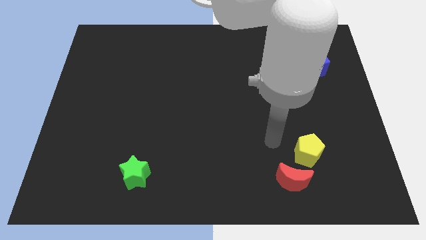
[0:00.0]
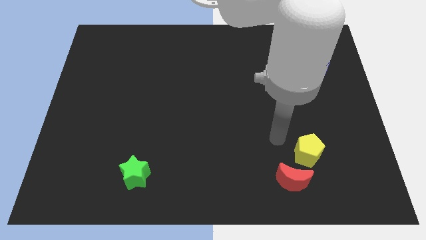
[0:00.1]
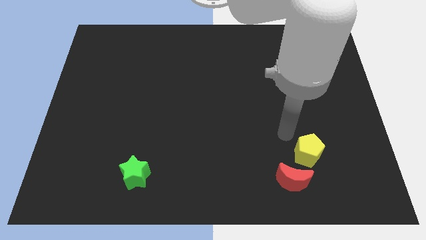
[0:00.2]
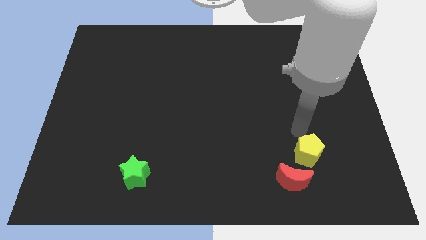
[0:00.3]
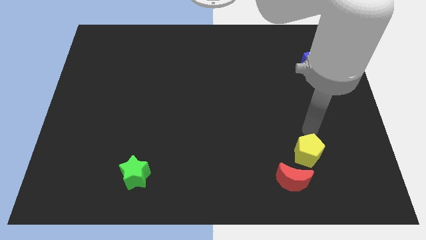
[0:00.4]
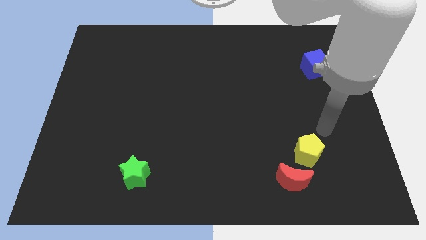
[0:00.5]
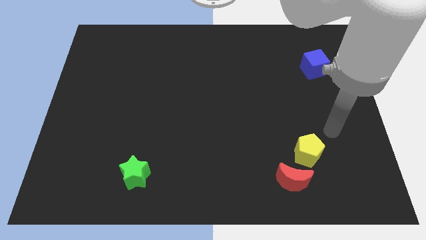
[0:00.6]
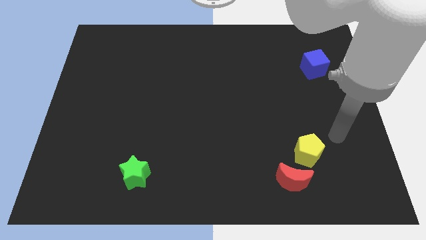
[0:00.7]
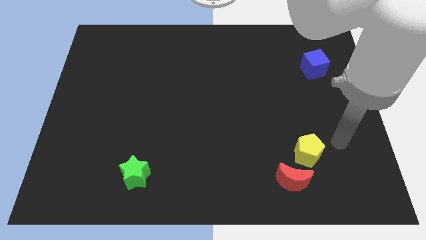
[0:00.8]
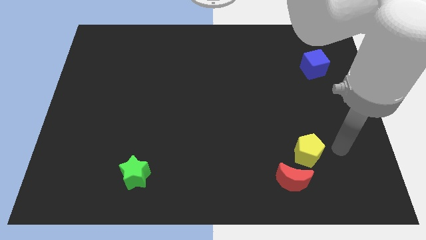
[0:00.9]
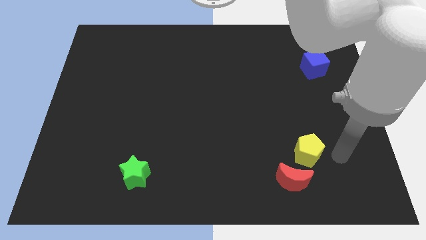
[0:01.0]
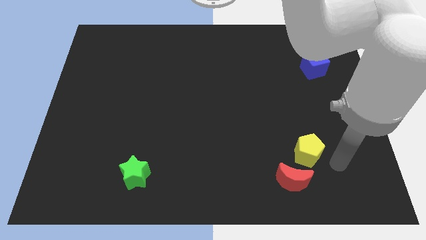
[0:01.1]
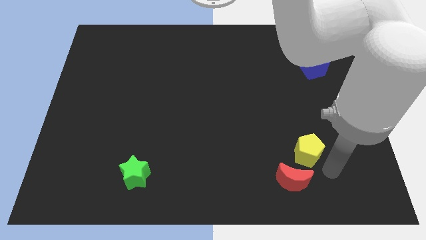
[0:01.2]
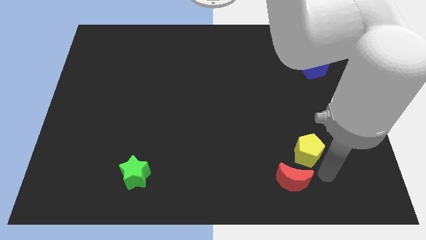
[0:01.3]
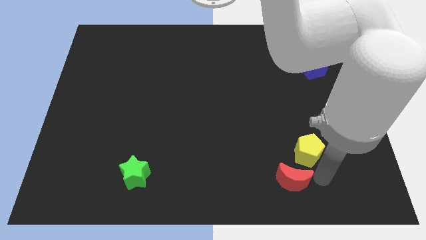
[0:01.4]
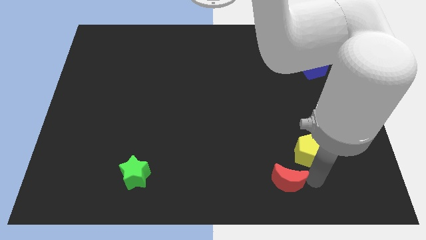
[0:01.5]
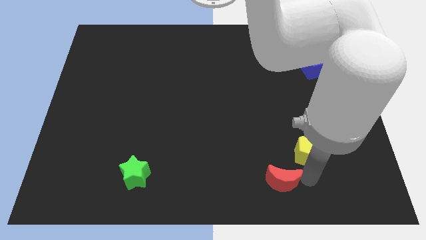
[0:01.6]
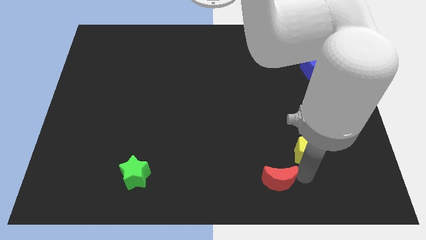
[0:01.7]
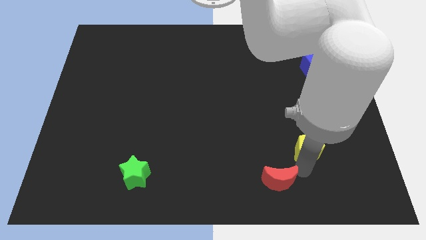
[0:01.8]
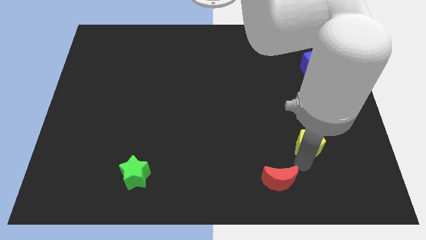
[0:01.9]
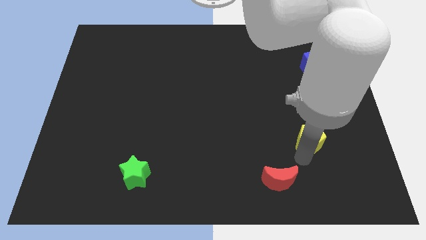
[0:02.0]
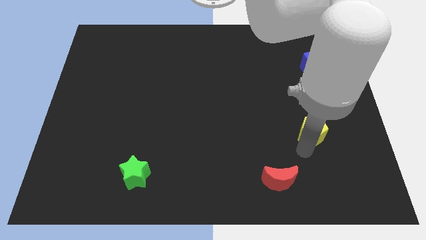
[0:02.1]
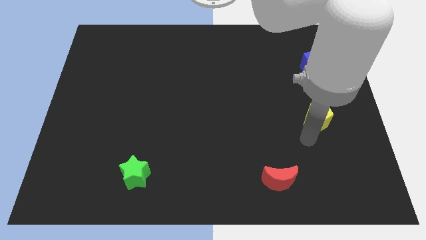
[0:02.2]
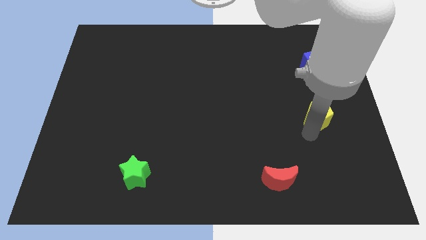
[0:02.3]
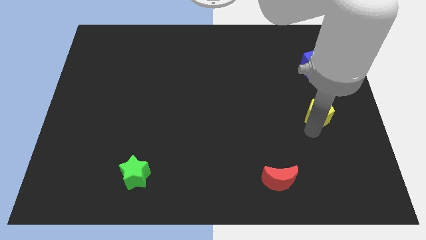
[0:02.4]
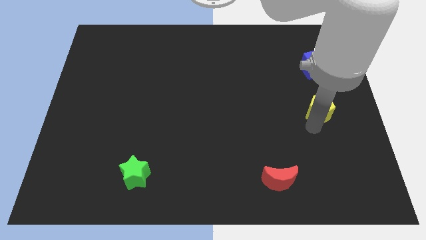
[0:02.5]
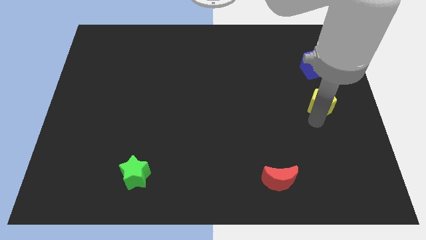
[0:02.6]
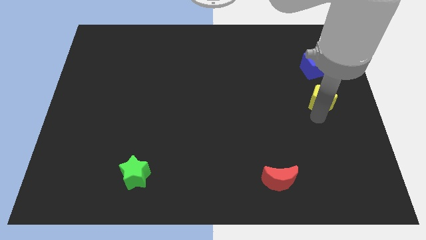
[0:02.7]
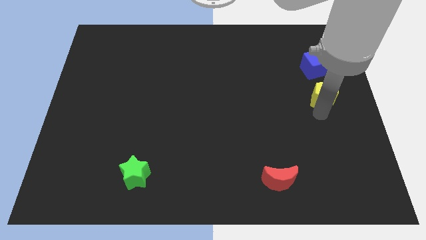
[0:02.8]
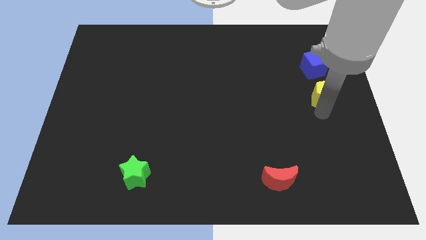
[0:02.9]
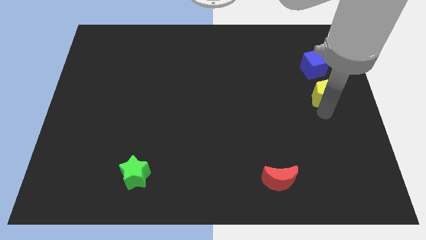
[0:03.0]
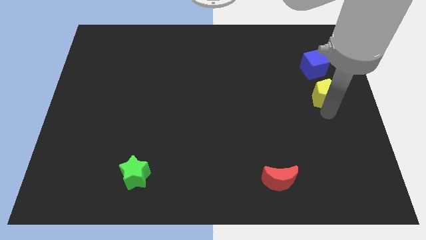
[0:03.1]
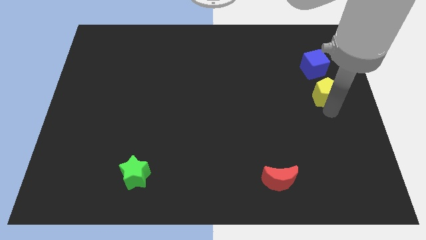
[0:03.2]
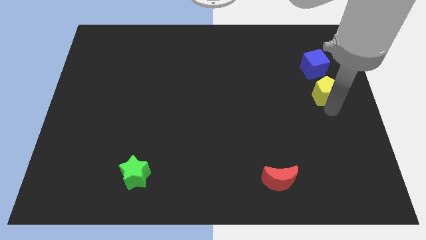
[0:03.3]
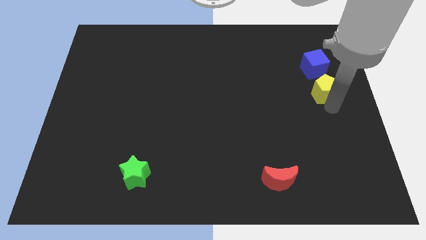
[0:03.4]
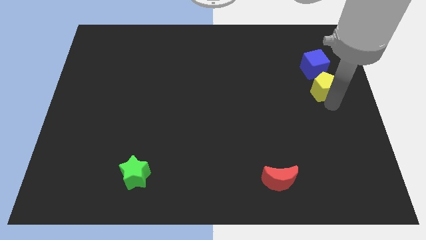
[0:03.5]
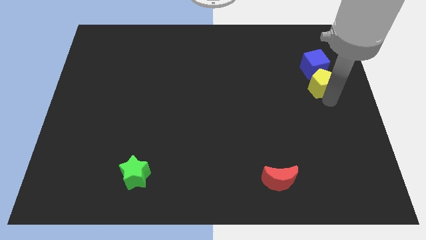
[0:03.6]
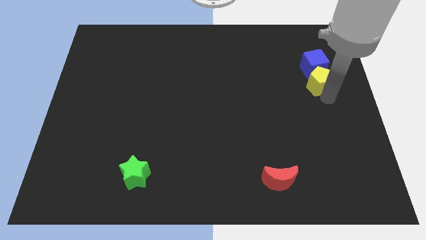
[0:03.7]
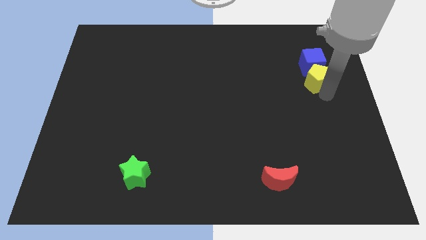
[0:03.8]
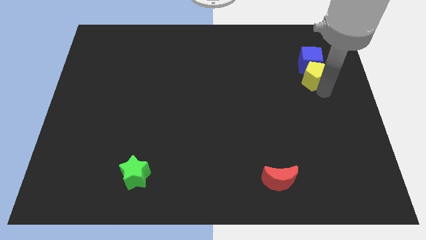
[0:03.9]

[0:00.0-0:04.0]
push the yellow block to the cube

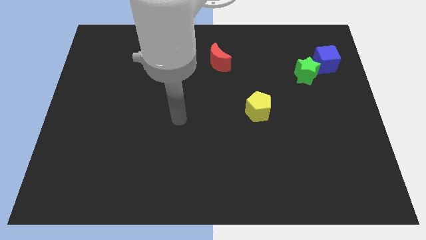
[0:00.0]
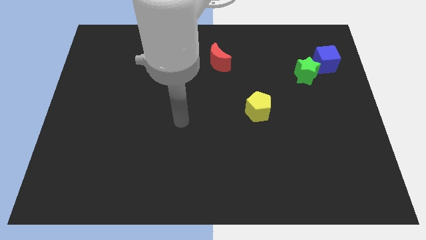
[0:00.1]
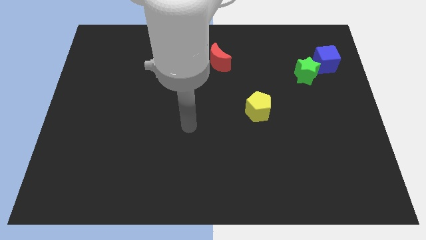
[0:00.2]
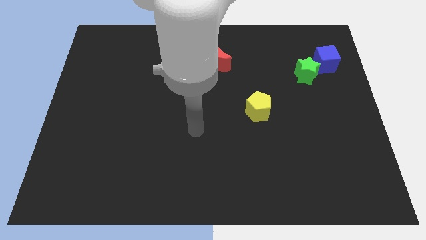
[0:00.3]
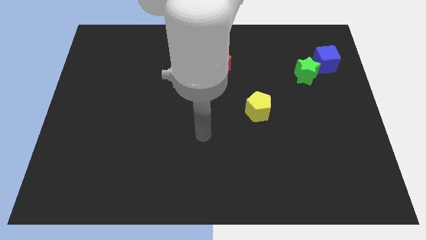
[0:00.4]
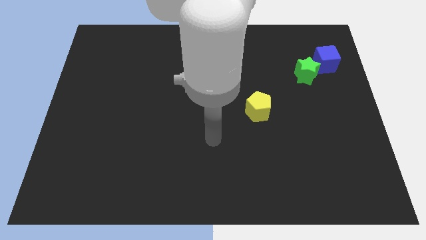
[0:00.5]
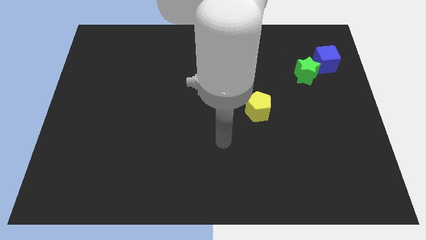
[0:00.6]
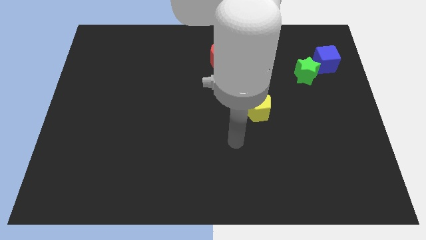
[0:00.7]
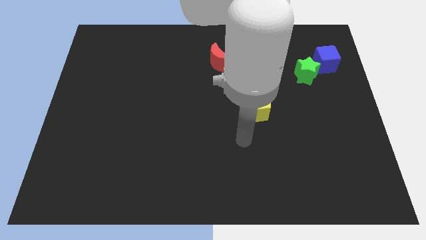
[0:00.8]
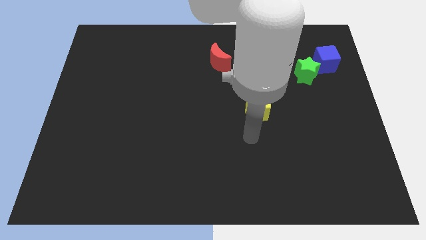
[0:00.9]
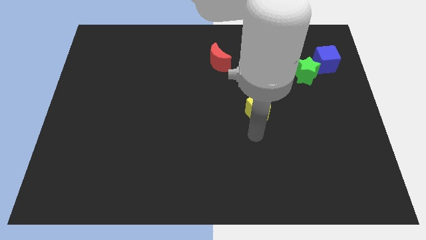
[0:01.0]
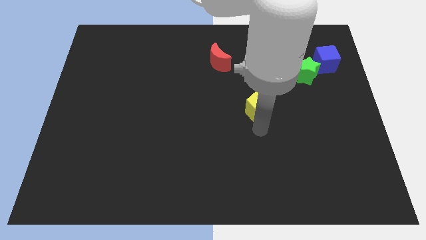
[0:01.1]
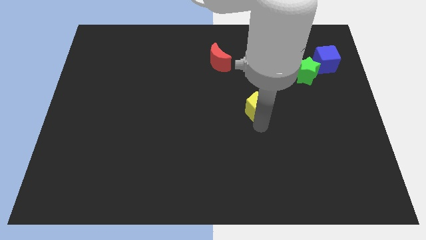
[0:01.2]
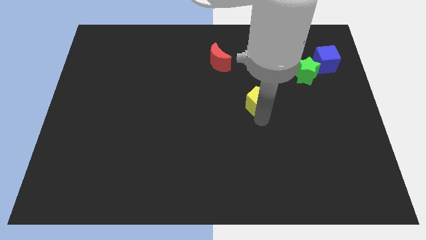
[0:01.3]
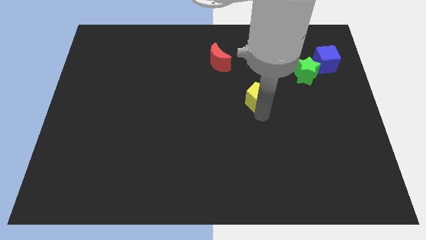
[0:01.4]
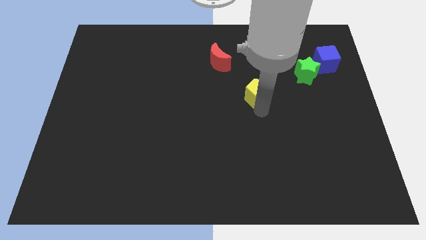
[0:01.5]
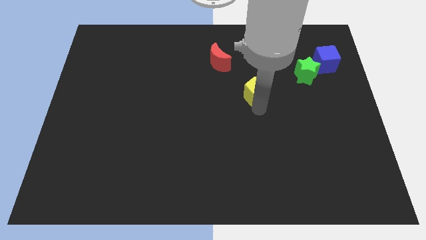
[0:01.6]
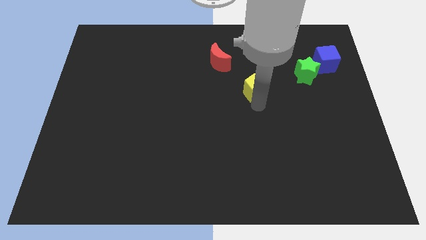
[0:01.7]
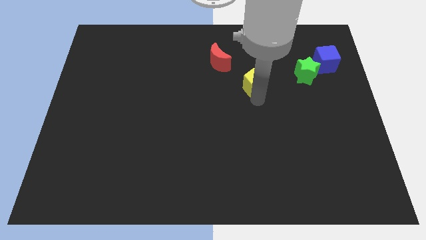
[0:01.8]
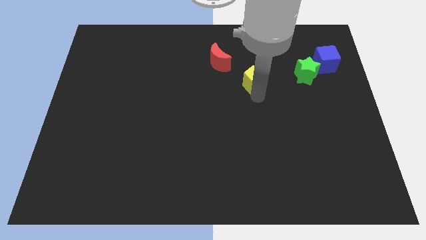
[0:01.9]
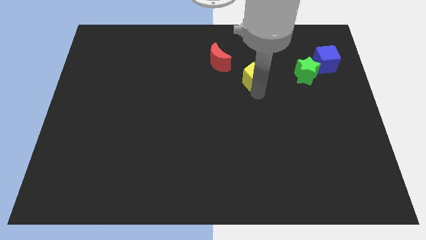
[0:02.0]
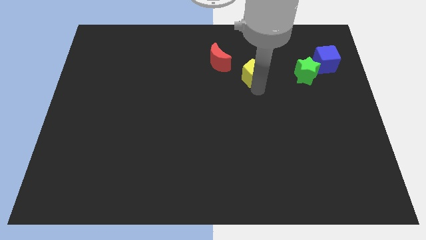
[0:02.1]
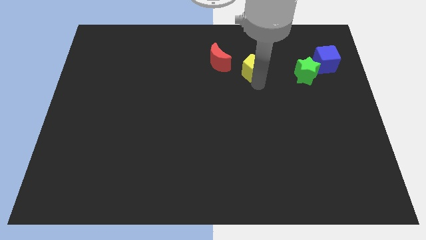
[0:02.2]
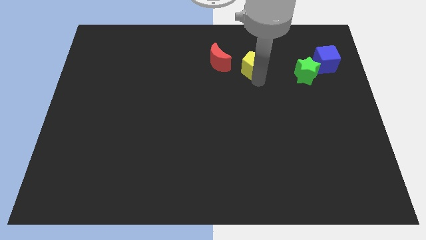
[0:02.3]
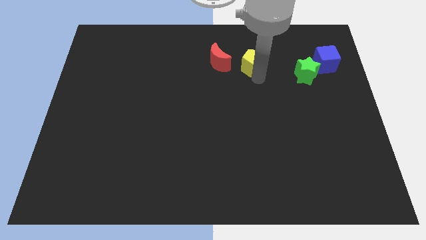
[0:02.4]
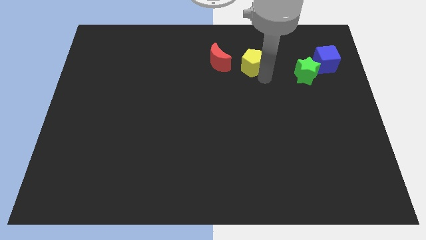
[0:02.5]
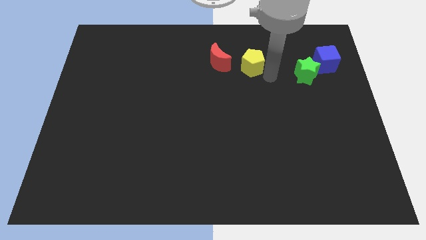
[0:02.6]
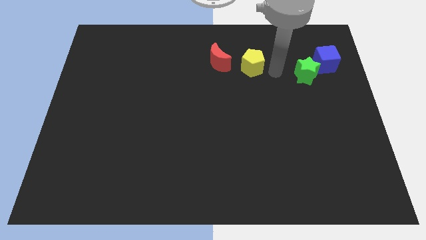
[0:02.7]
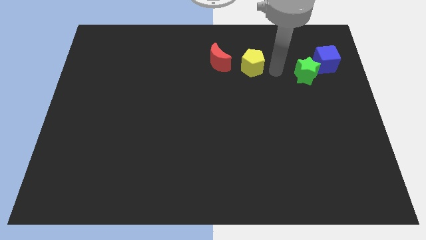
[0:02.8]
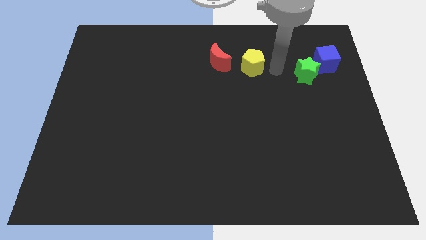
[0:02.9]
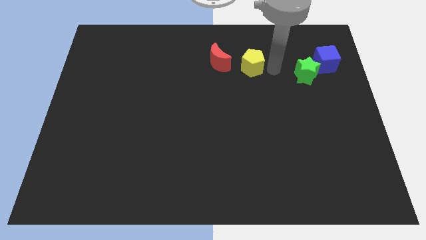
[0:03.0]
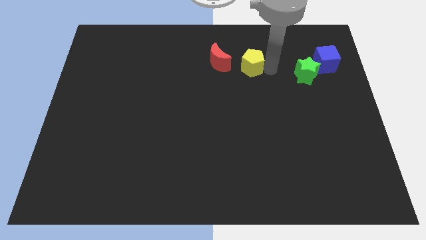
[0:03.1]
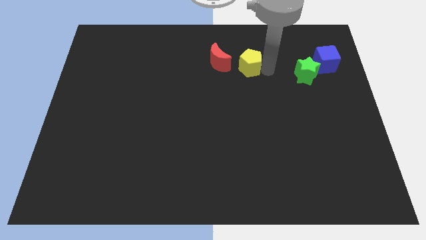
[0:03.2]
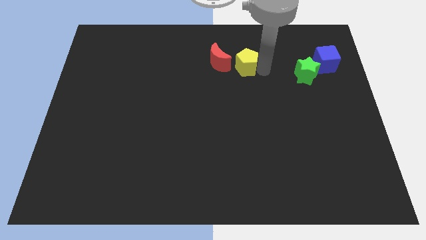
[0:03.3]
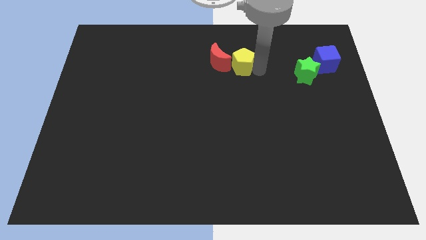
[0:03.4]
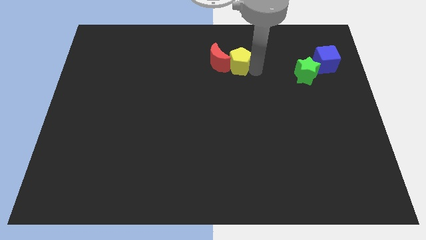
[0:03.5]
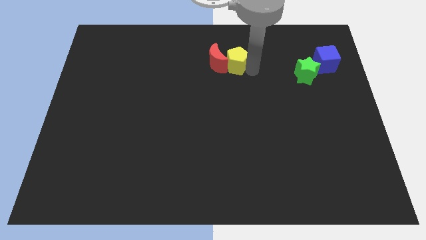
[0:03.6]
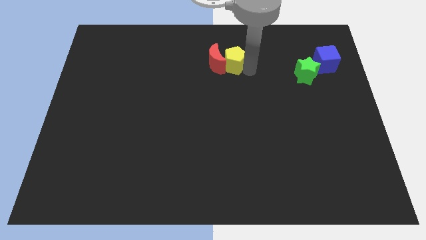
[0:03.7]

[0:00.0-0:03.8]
put the yellow pentagon to the red block

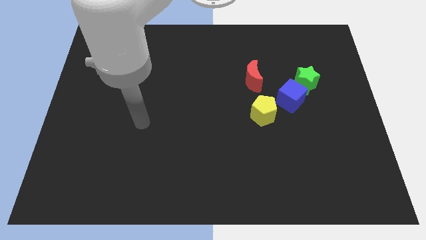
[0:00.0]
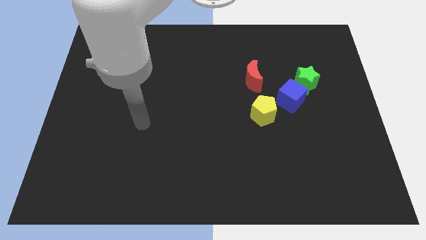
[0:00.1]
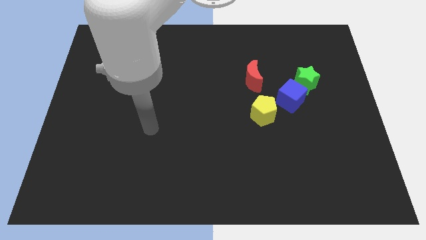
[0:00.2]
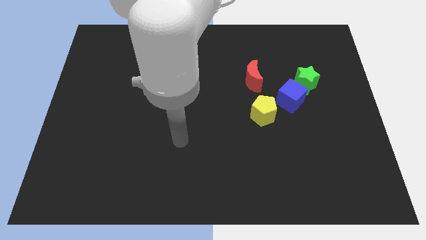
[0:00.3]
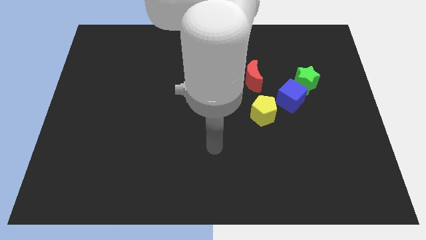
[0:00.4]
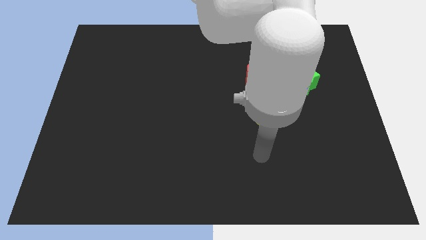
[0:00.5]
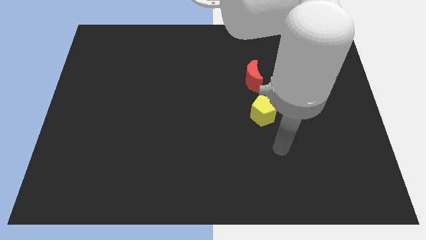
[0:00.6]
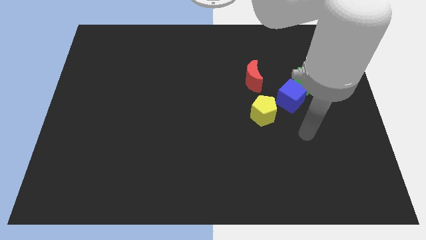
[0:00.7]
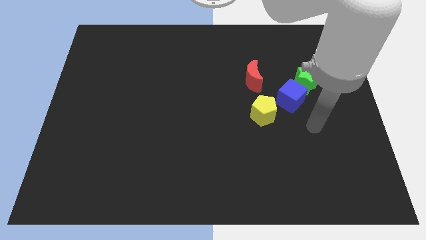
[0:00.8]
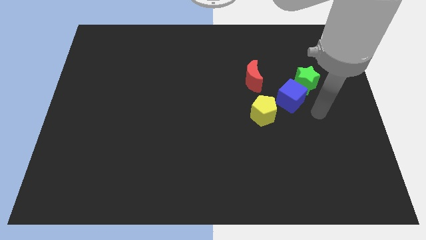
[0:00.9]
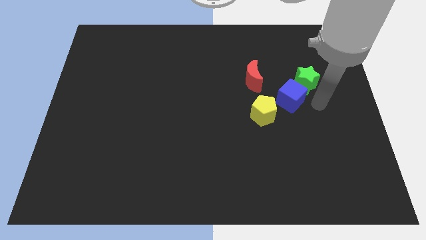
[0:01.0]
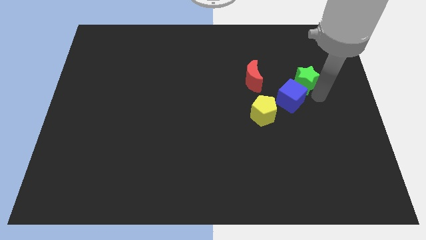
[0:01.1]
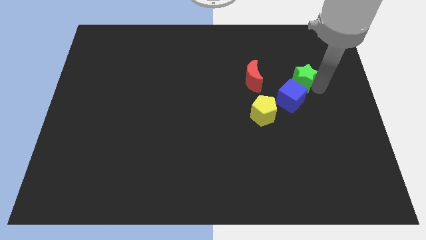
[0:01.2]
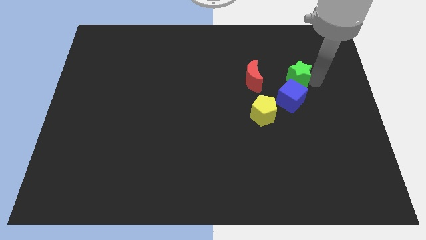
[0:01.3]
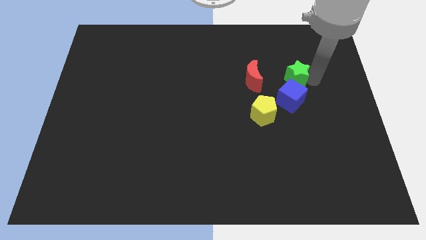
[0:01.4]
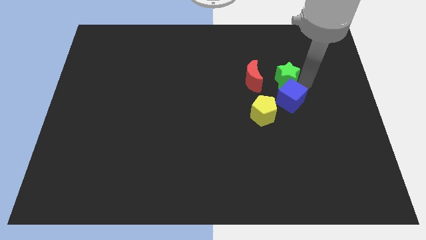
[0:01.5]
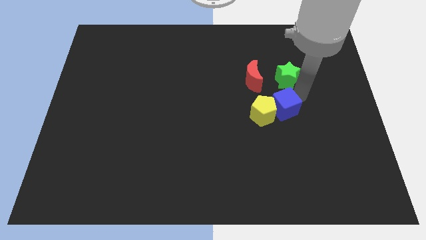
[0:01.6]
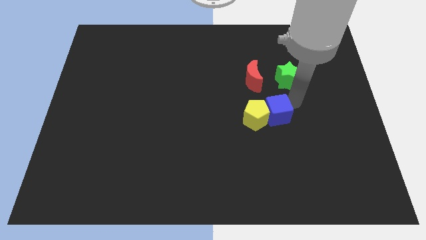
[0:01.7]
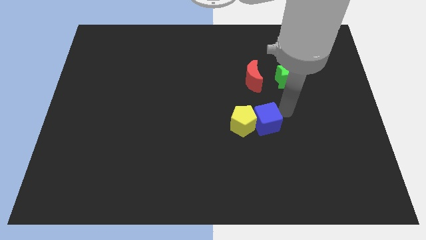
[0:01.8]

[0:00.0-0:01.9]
push the cube to the yellow block
